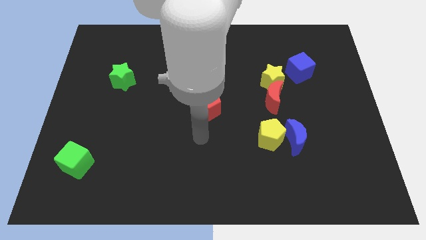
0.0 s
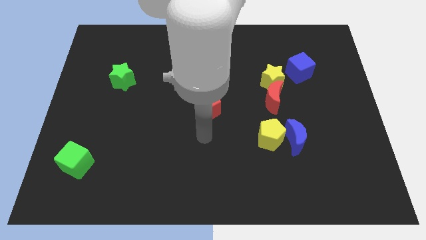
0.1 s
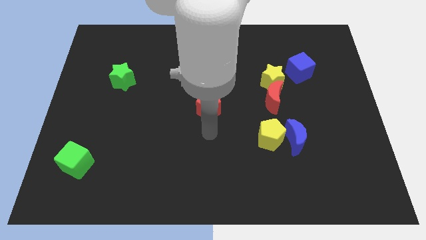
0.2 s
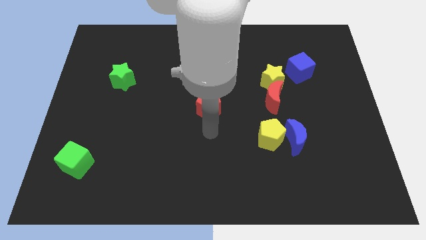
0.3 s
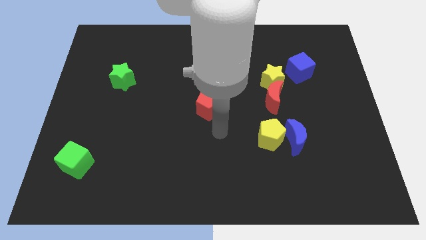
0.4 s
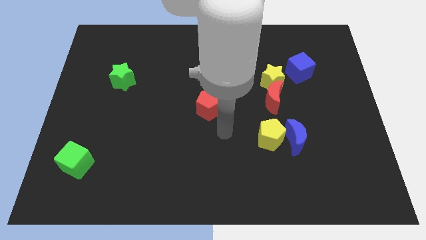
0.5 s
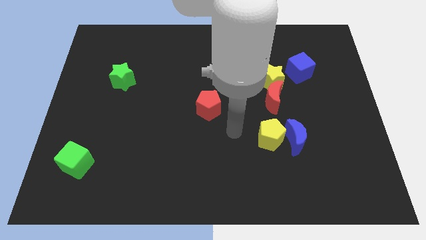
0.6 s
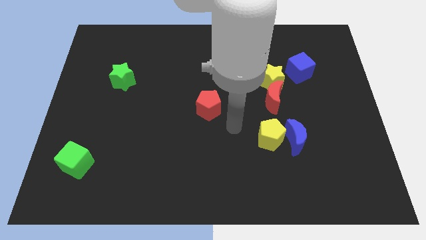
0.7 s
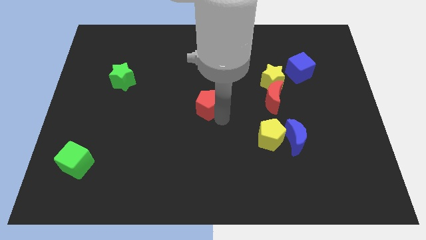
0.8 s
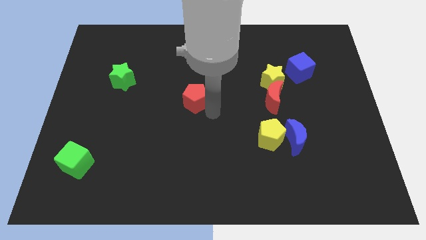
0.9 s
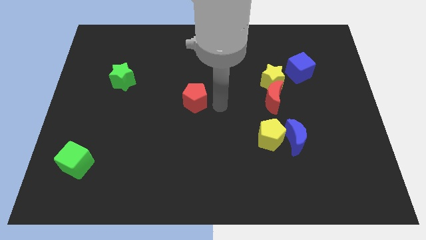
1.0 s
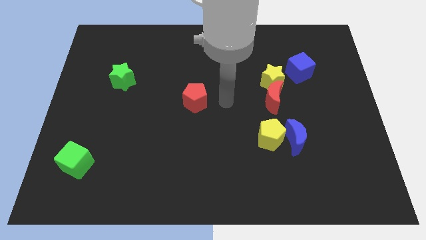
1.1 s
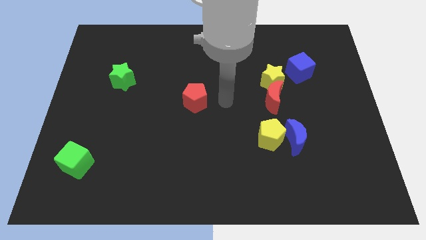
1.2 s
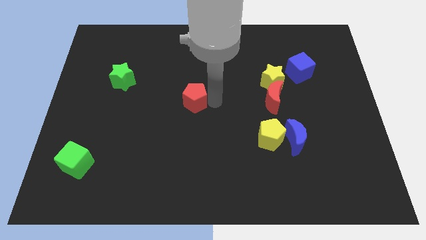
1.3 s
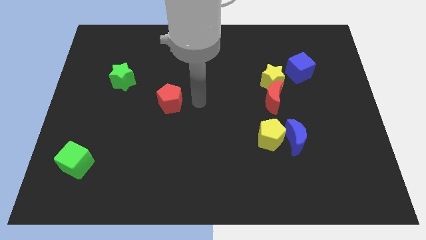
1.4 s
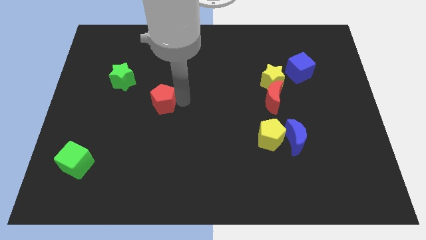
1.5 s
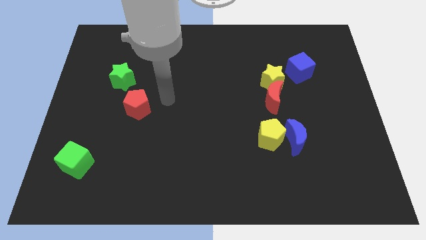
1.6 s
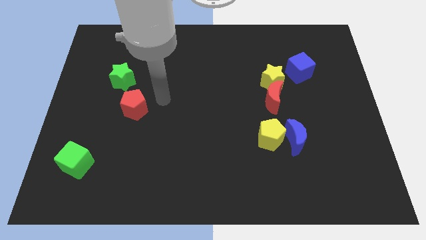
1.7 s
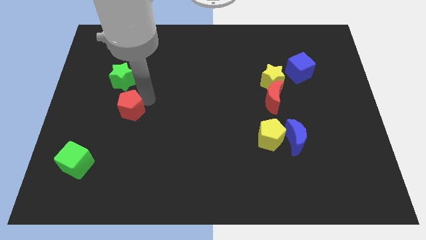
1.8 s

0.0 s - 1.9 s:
place the red pentagon towards the bottom right side of the green star

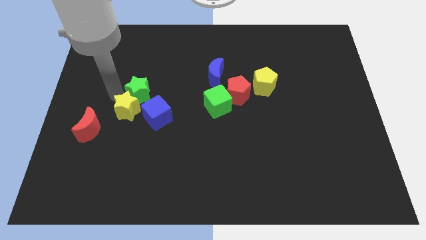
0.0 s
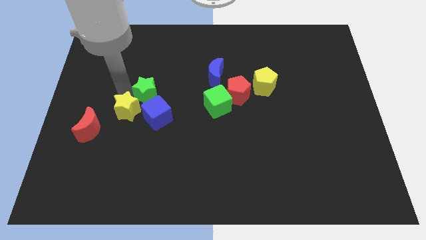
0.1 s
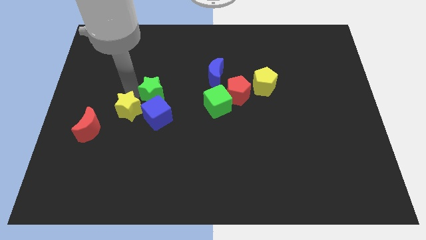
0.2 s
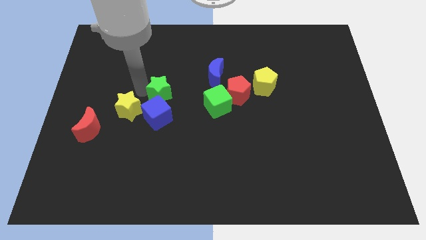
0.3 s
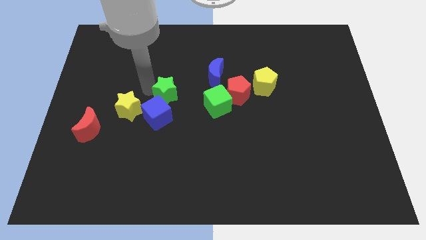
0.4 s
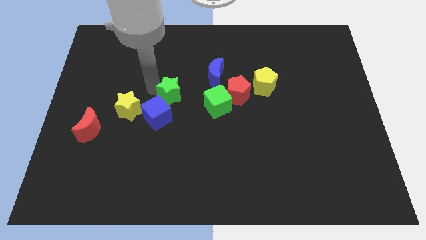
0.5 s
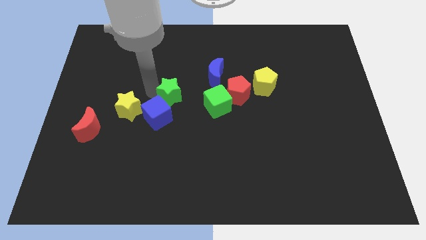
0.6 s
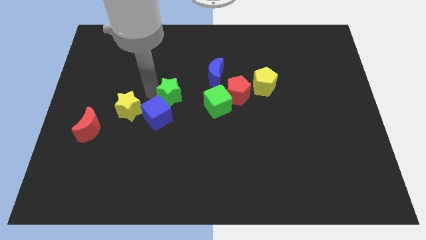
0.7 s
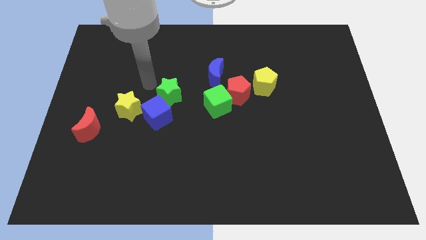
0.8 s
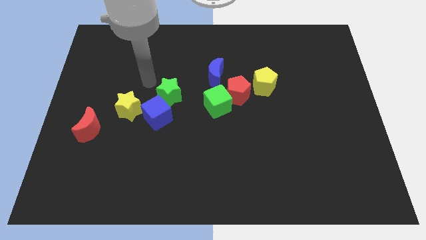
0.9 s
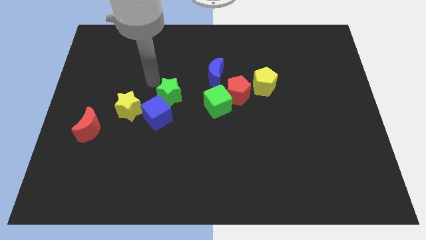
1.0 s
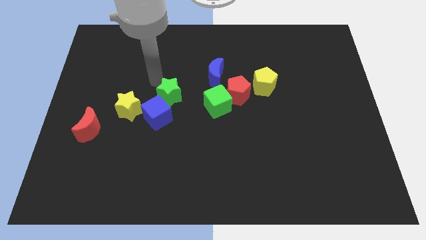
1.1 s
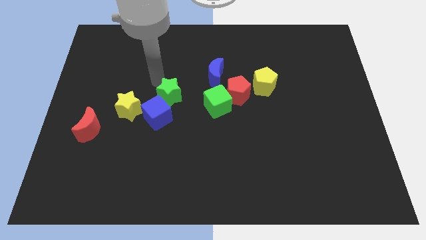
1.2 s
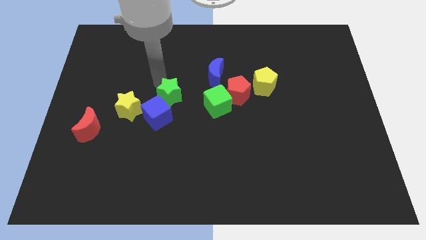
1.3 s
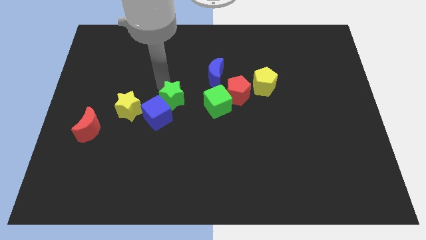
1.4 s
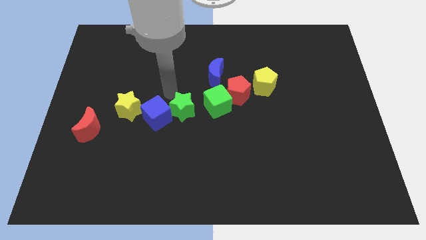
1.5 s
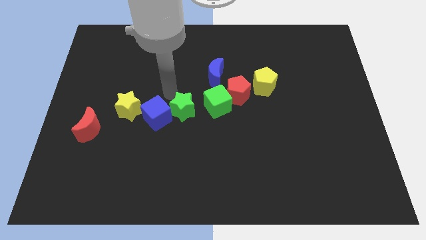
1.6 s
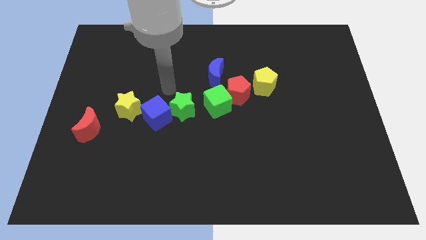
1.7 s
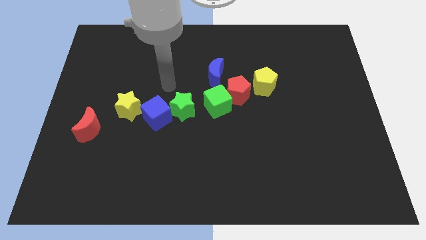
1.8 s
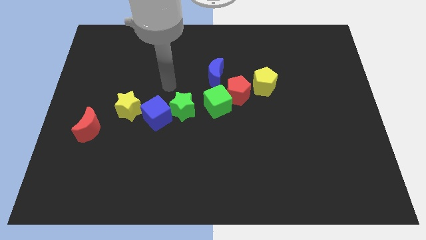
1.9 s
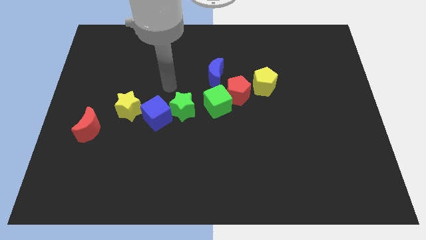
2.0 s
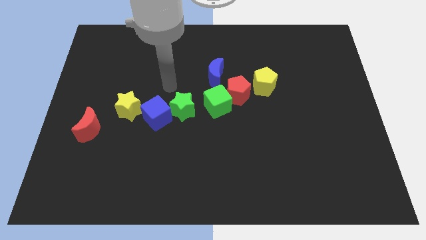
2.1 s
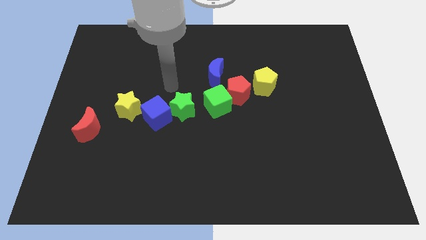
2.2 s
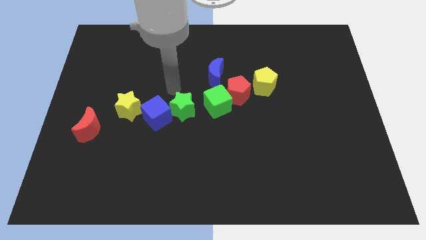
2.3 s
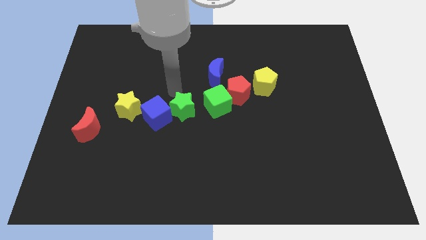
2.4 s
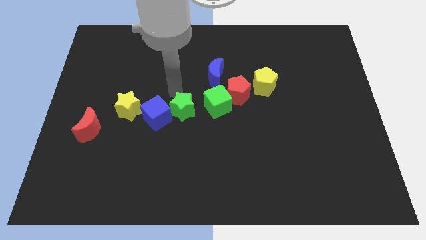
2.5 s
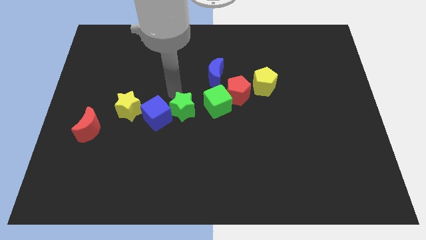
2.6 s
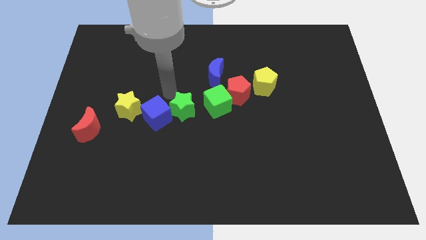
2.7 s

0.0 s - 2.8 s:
place the green star in between green cube and blue cube

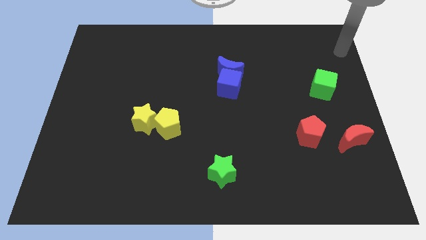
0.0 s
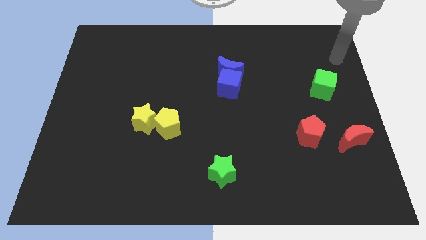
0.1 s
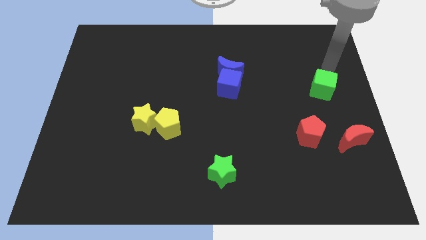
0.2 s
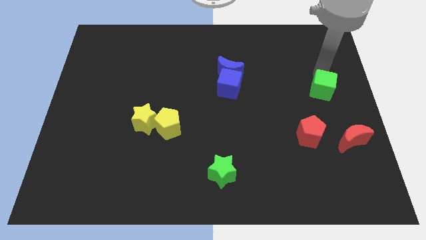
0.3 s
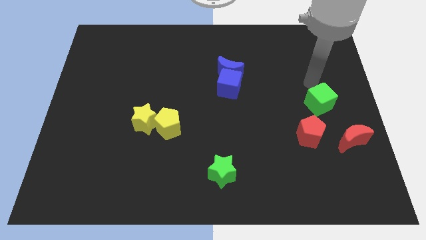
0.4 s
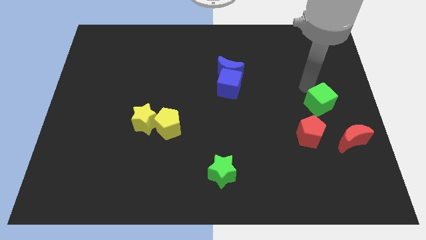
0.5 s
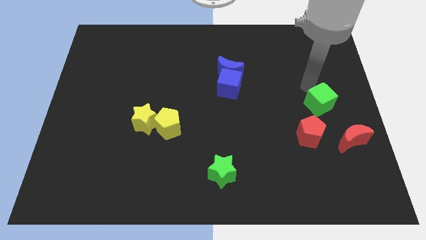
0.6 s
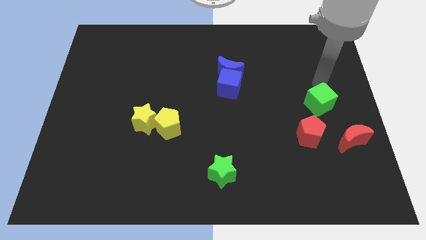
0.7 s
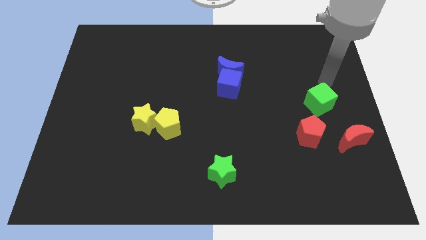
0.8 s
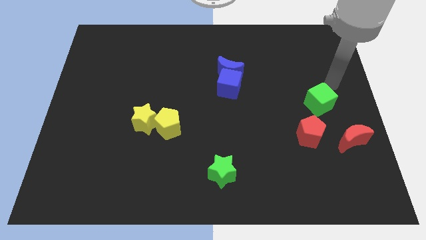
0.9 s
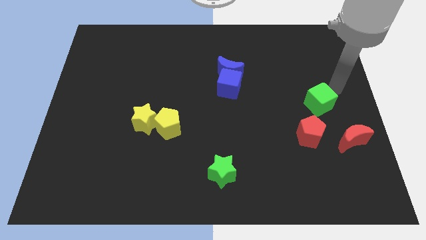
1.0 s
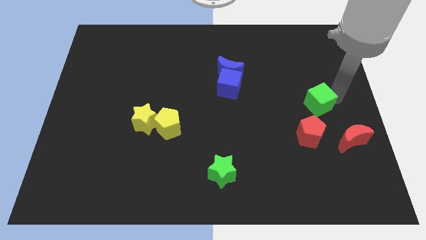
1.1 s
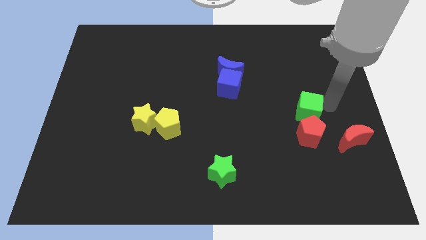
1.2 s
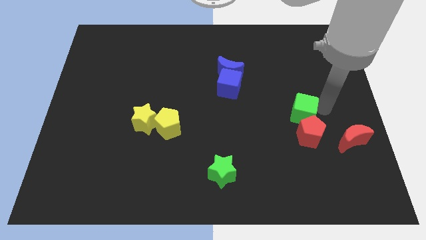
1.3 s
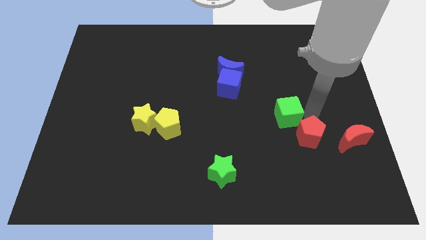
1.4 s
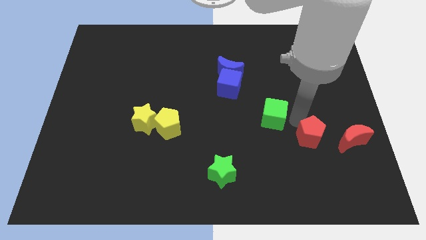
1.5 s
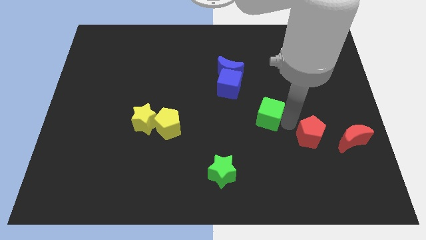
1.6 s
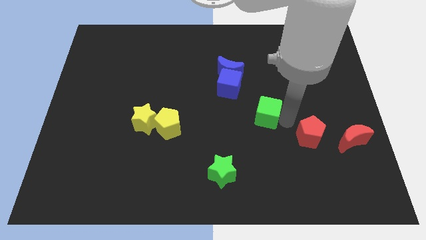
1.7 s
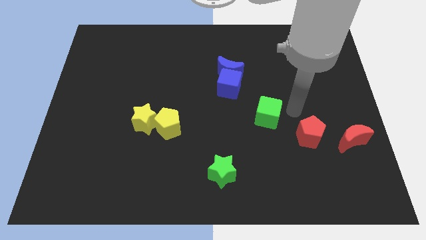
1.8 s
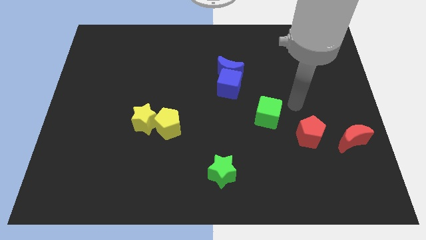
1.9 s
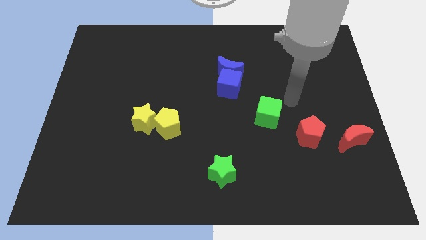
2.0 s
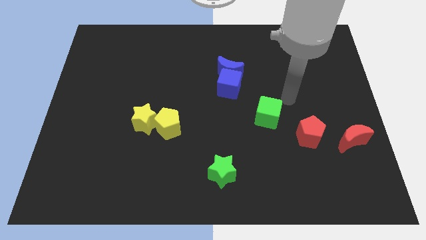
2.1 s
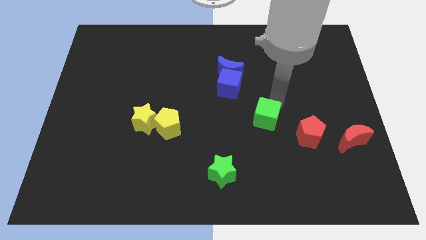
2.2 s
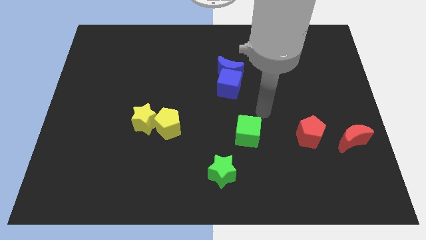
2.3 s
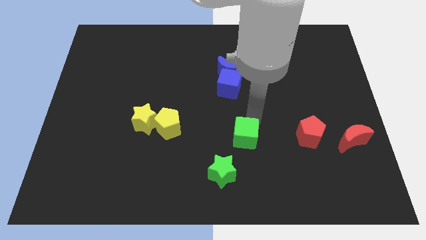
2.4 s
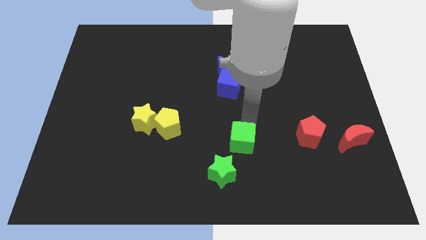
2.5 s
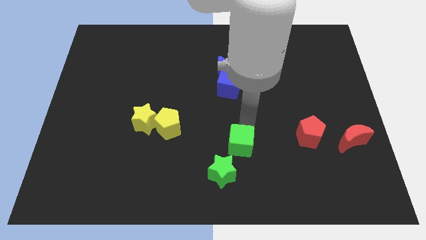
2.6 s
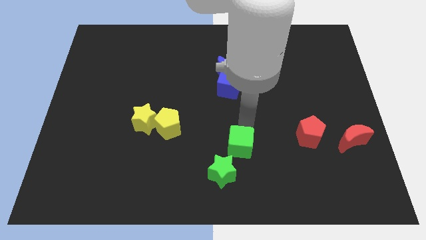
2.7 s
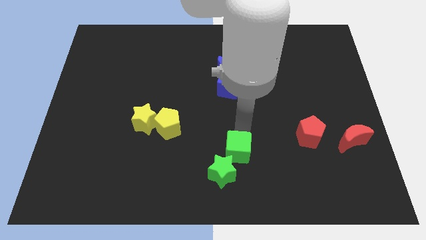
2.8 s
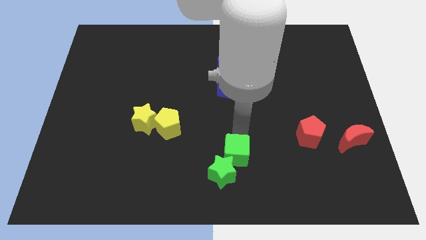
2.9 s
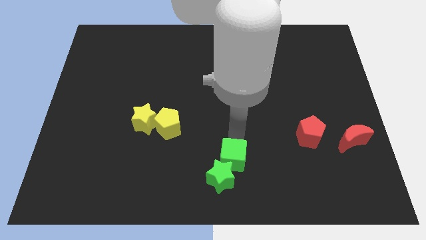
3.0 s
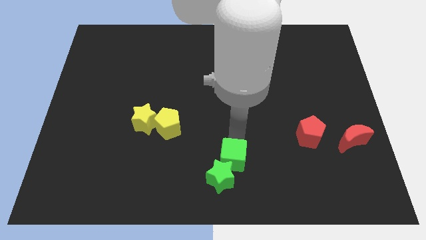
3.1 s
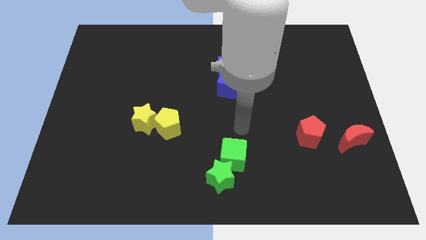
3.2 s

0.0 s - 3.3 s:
push the green cube into green star

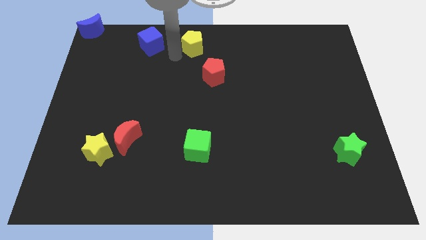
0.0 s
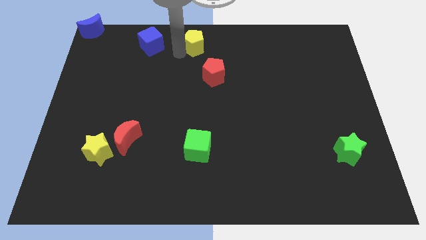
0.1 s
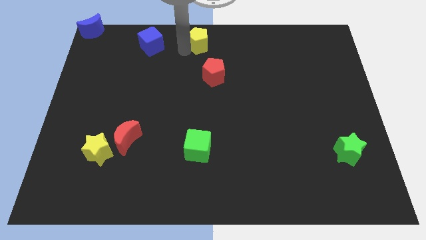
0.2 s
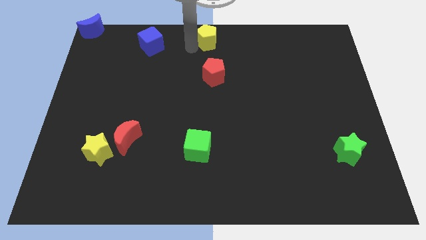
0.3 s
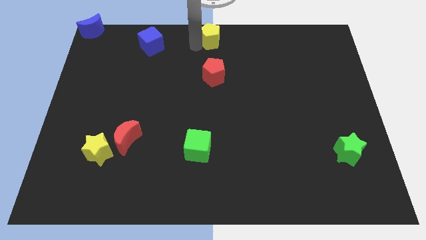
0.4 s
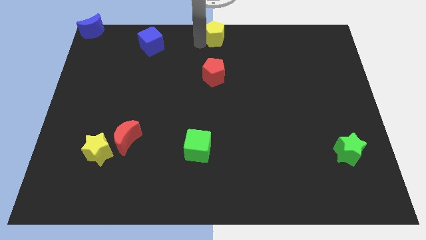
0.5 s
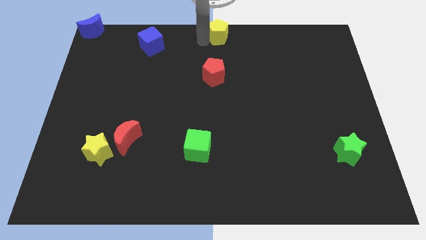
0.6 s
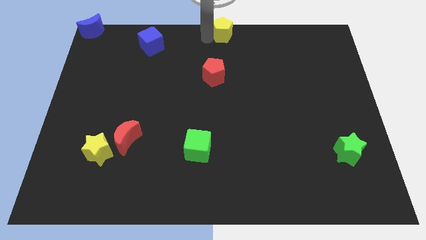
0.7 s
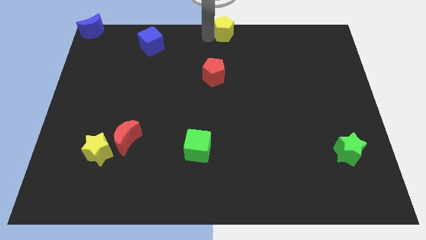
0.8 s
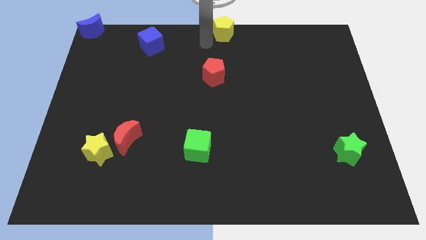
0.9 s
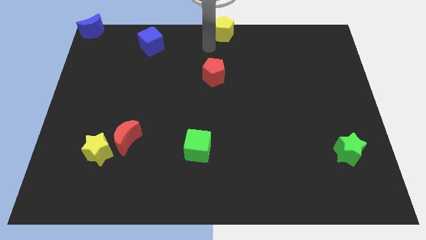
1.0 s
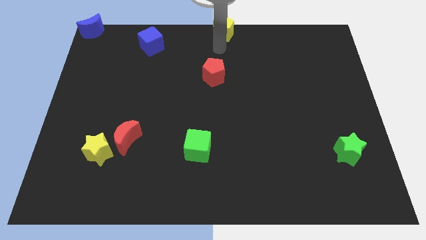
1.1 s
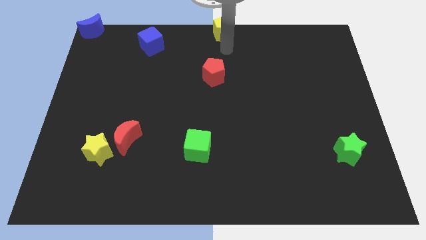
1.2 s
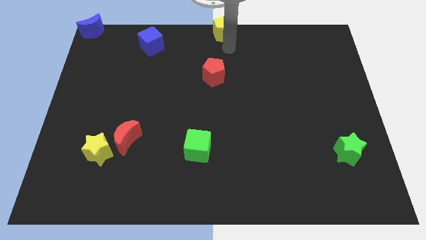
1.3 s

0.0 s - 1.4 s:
move the yellow pentagon to the top center of the board
